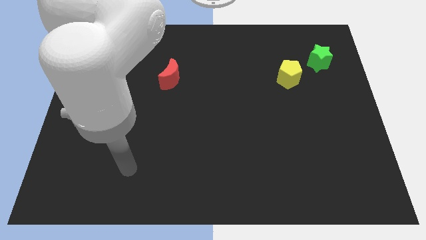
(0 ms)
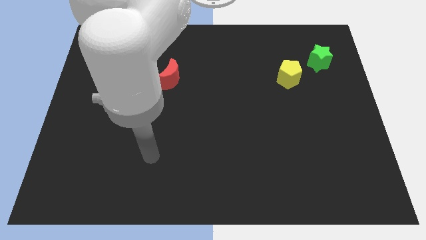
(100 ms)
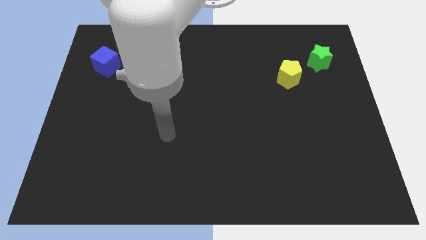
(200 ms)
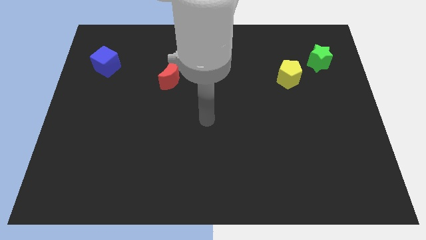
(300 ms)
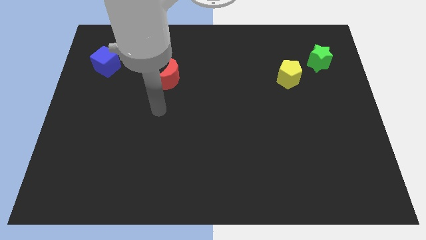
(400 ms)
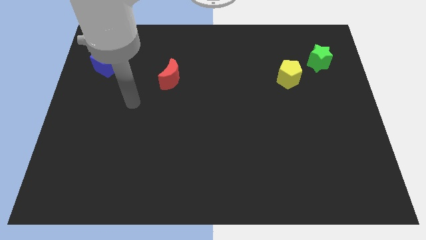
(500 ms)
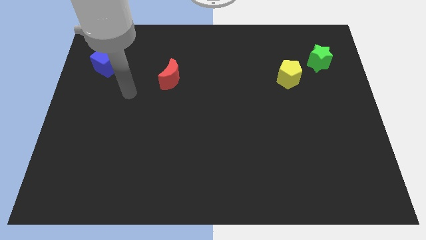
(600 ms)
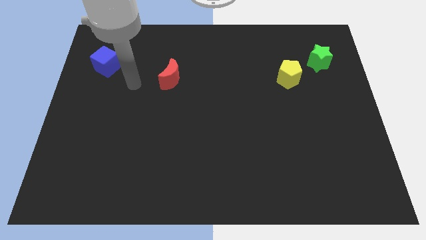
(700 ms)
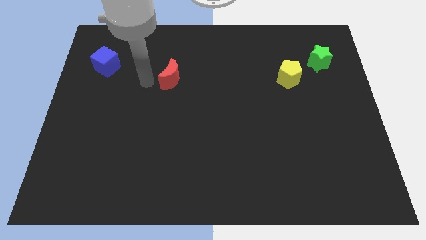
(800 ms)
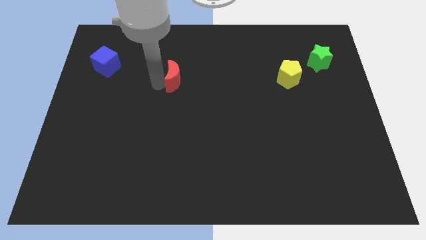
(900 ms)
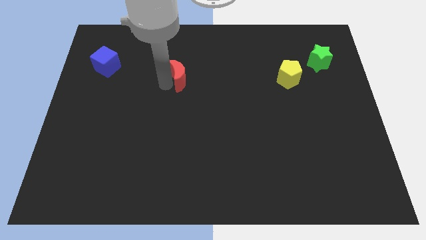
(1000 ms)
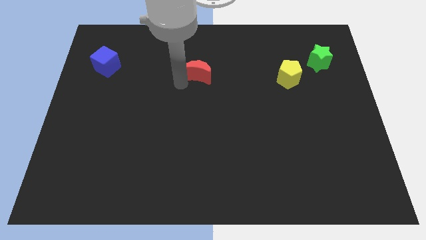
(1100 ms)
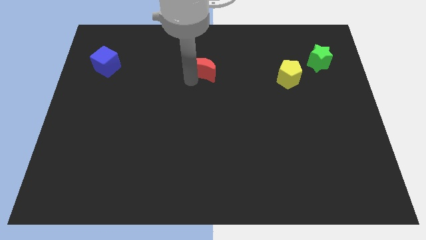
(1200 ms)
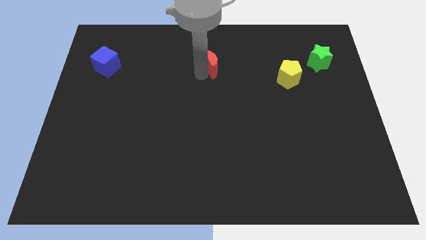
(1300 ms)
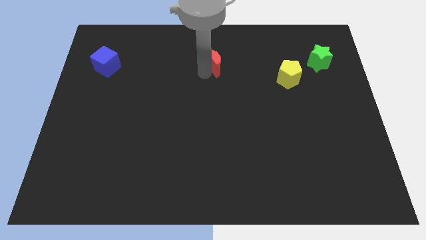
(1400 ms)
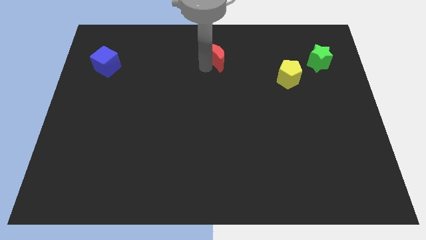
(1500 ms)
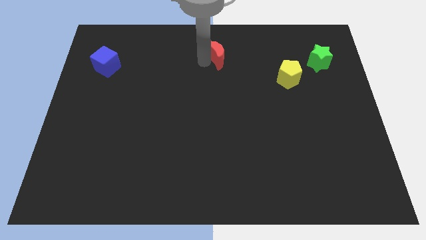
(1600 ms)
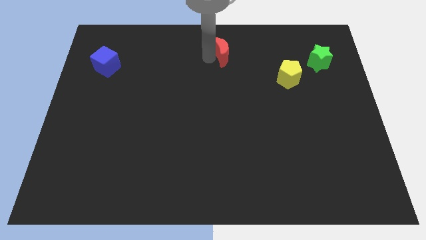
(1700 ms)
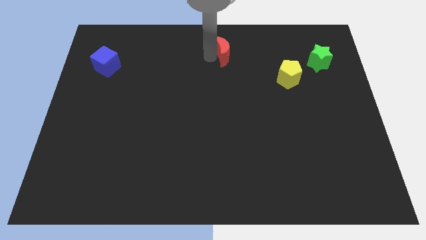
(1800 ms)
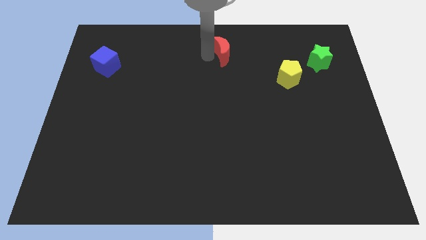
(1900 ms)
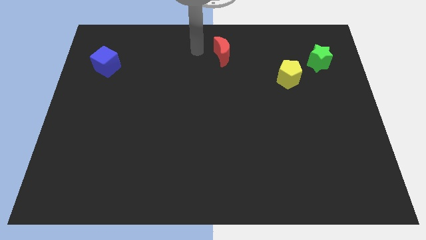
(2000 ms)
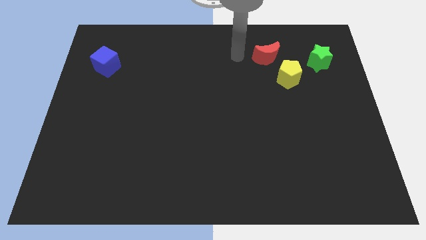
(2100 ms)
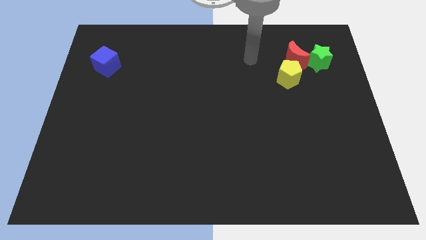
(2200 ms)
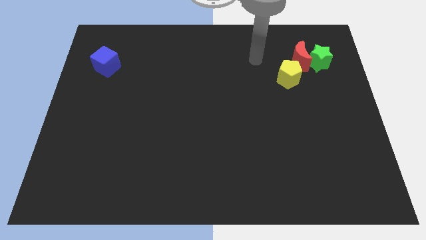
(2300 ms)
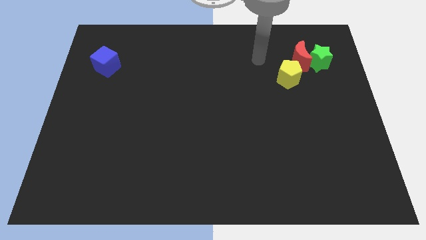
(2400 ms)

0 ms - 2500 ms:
put the red block close to the green block

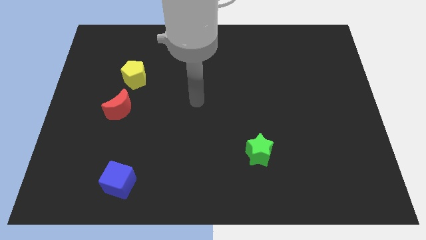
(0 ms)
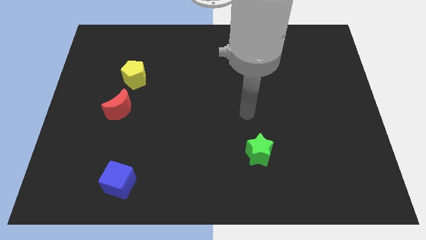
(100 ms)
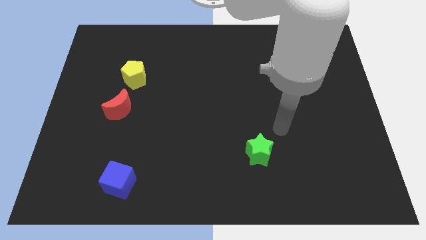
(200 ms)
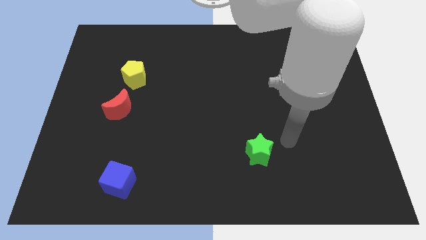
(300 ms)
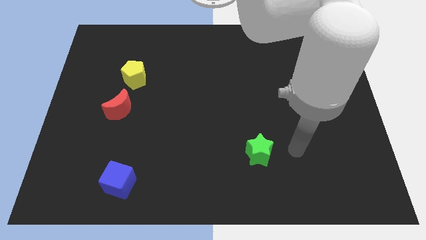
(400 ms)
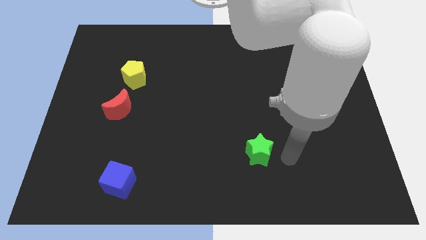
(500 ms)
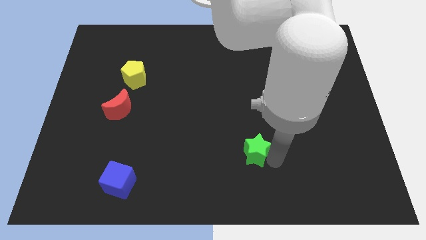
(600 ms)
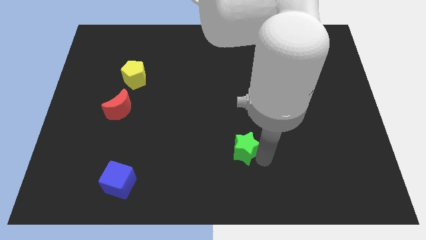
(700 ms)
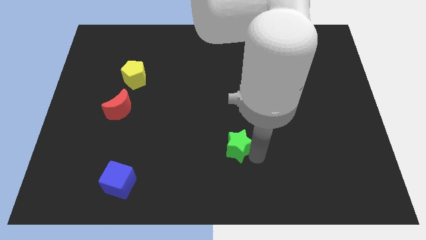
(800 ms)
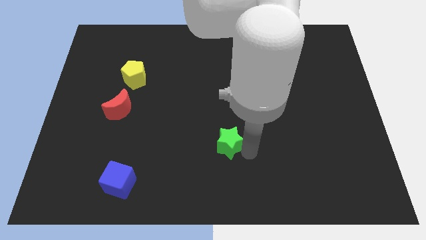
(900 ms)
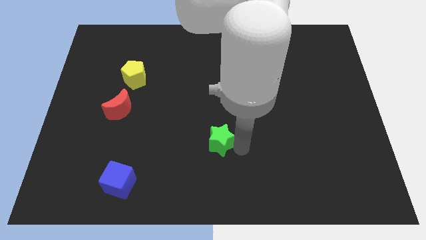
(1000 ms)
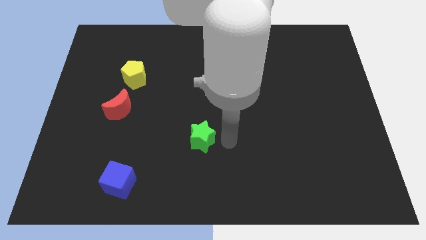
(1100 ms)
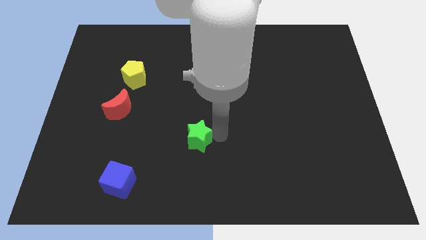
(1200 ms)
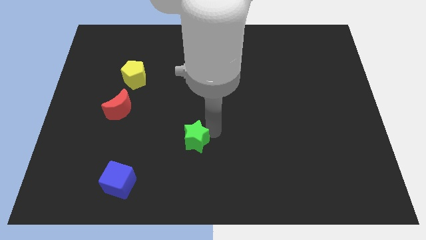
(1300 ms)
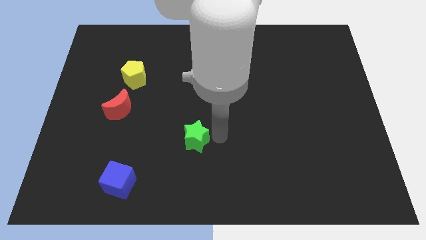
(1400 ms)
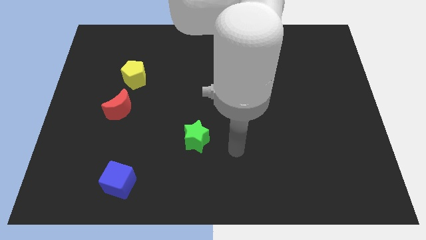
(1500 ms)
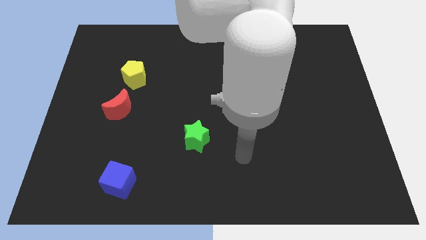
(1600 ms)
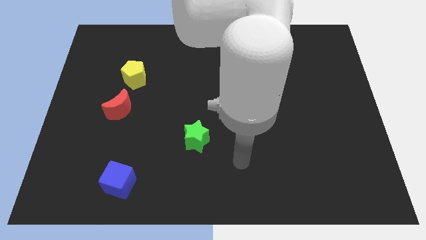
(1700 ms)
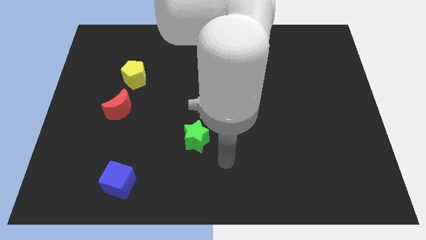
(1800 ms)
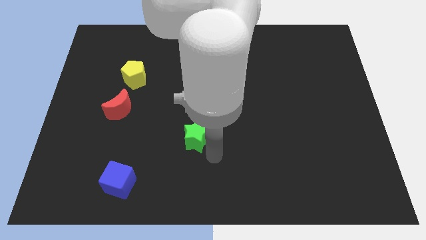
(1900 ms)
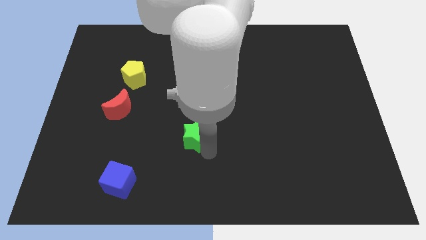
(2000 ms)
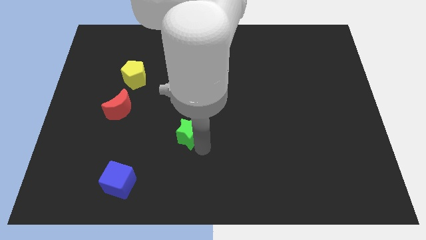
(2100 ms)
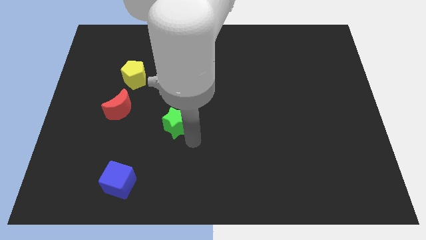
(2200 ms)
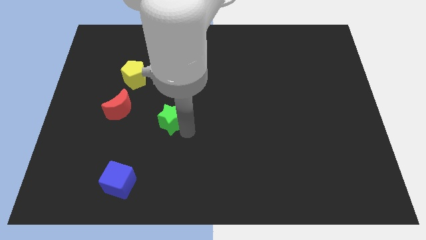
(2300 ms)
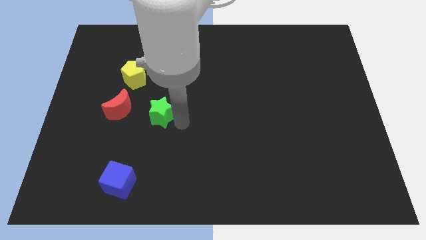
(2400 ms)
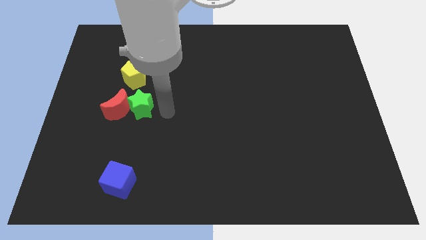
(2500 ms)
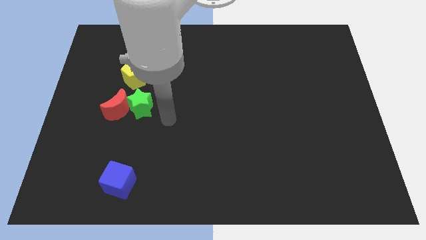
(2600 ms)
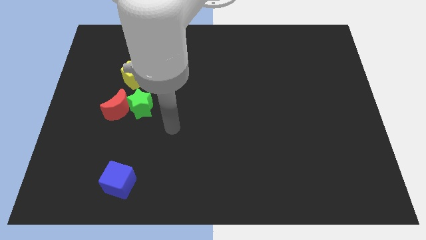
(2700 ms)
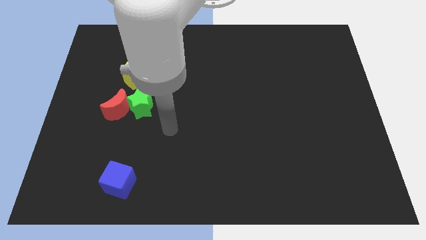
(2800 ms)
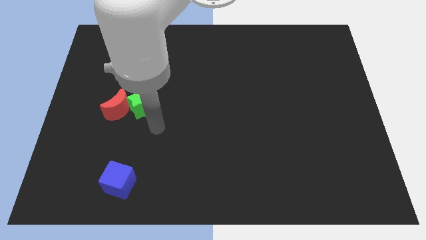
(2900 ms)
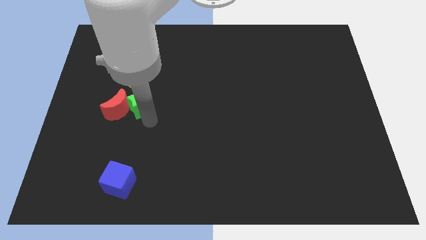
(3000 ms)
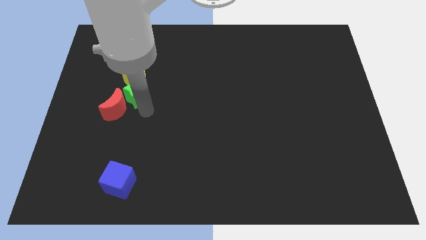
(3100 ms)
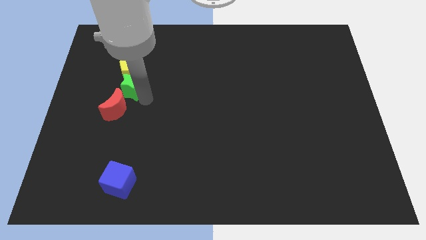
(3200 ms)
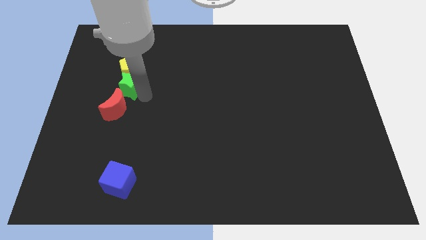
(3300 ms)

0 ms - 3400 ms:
slide the green star to the pentagon

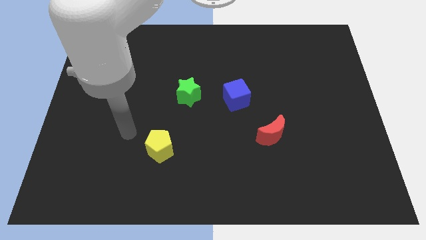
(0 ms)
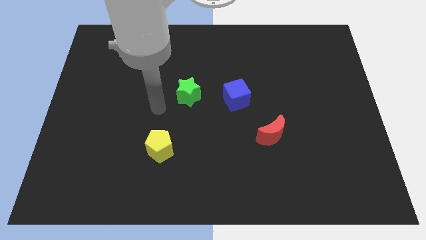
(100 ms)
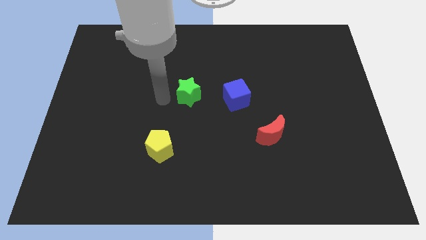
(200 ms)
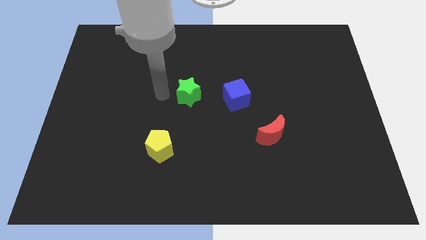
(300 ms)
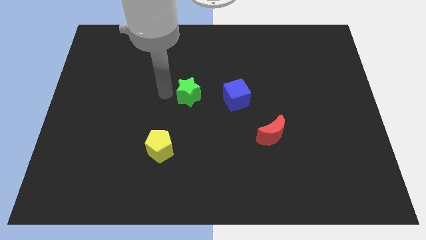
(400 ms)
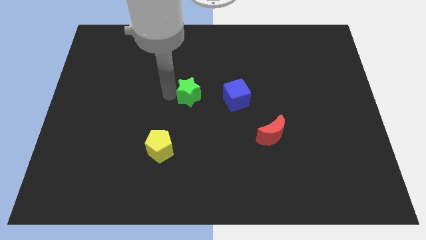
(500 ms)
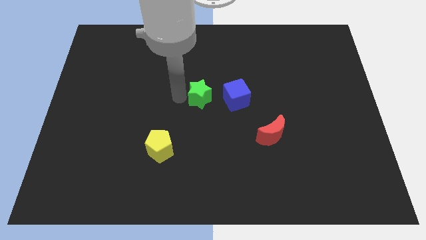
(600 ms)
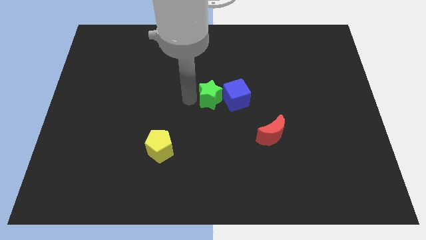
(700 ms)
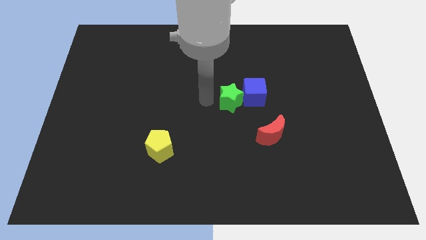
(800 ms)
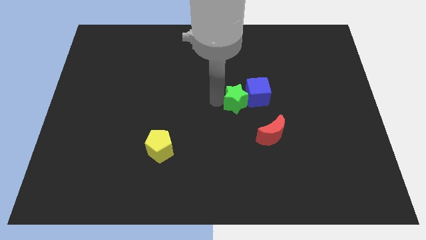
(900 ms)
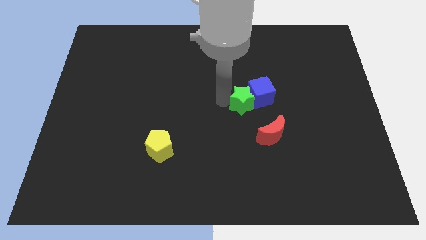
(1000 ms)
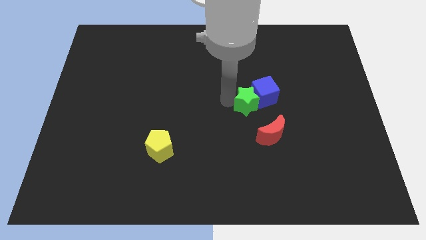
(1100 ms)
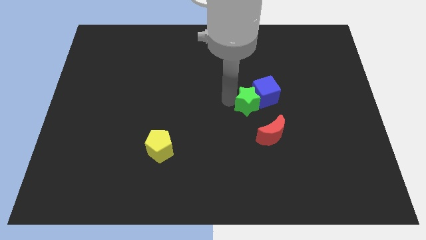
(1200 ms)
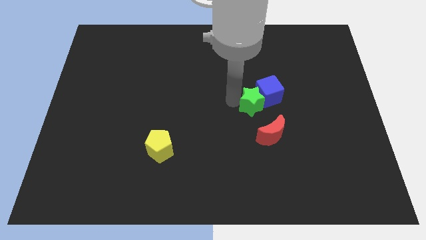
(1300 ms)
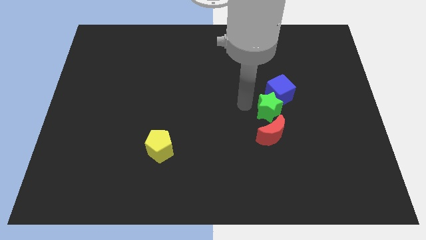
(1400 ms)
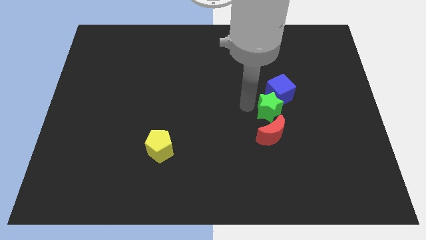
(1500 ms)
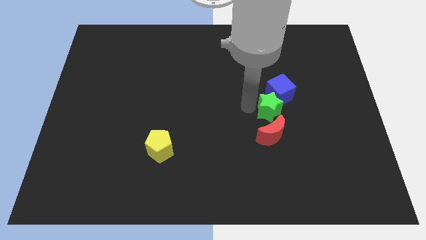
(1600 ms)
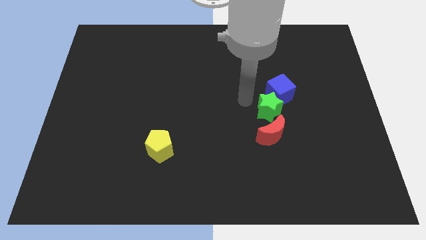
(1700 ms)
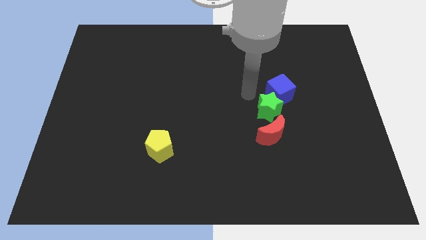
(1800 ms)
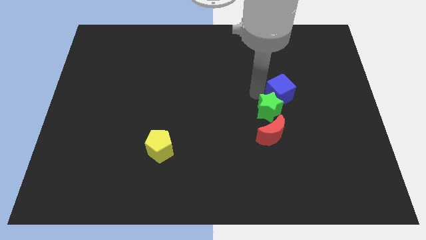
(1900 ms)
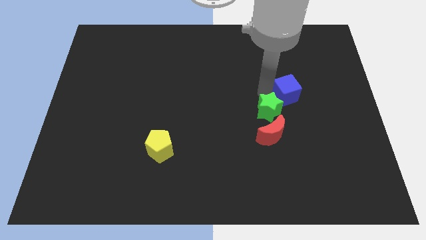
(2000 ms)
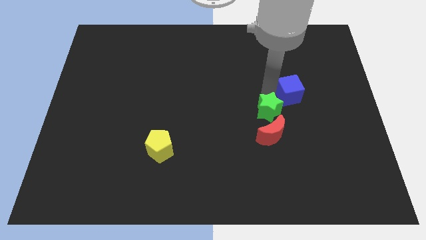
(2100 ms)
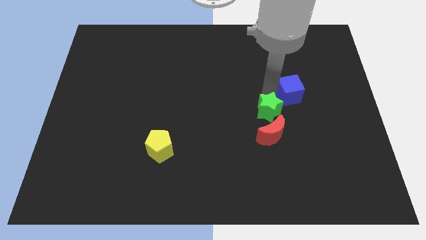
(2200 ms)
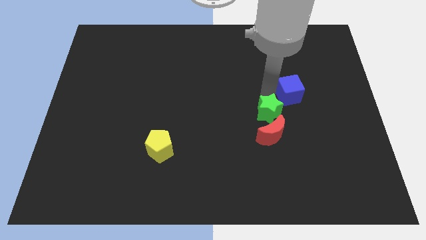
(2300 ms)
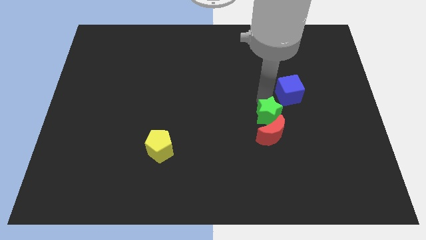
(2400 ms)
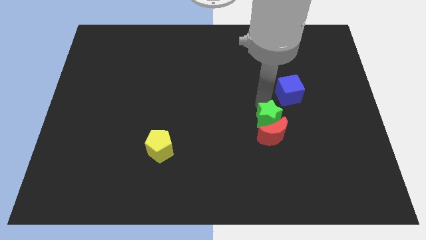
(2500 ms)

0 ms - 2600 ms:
put the green star towards the moon

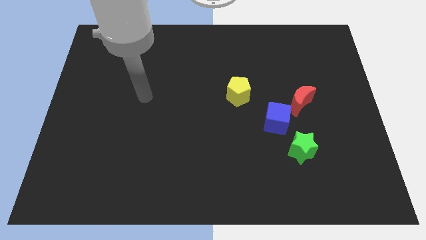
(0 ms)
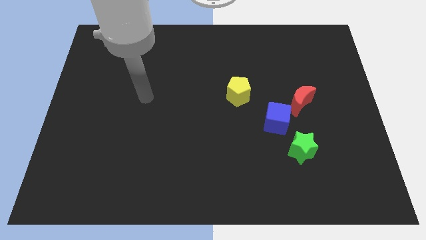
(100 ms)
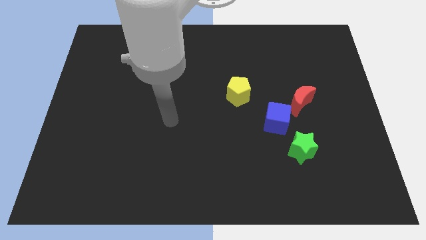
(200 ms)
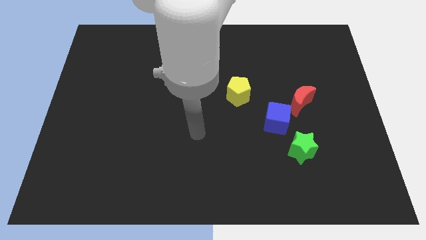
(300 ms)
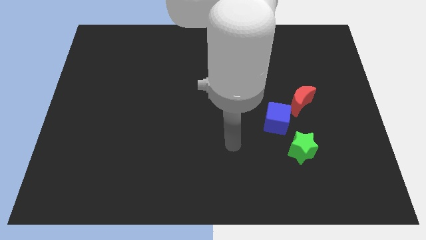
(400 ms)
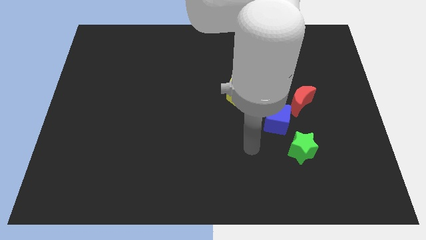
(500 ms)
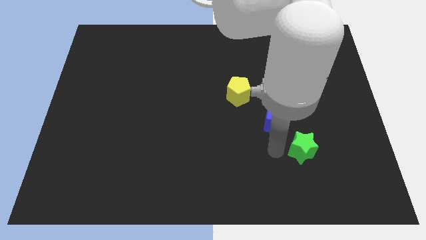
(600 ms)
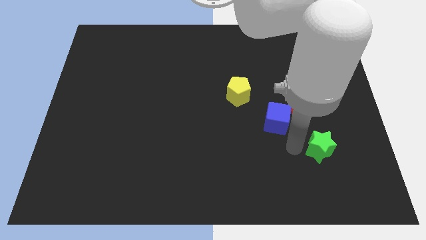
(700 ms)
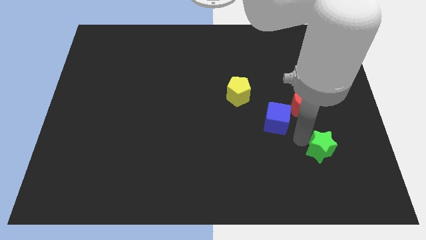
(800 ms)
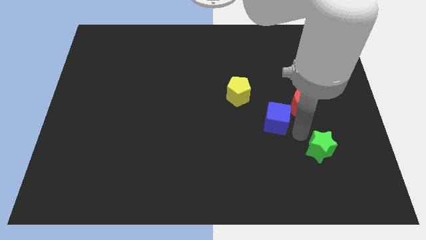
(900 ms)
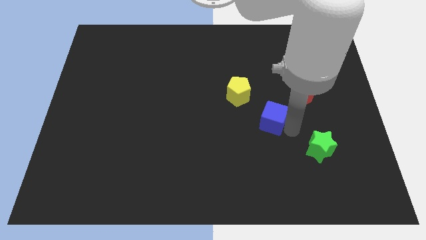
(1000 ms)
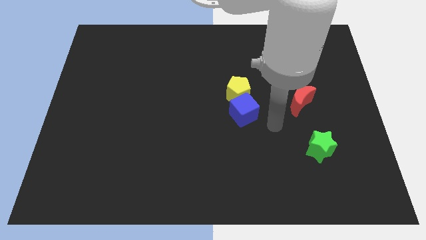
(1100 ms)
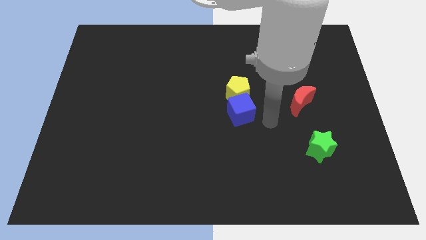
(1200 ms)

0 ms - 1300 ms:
put the blue cube to the yellow block
